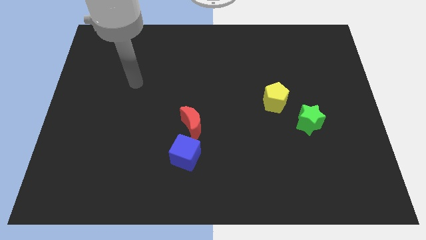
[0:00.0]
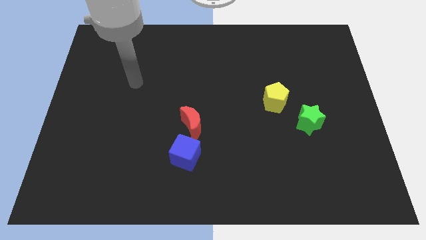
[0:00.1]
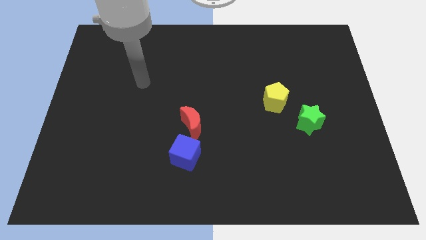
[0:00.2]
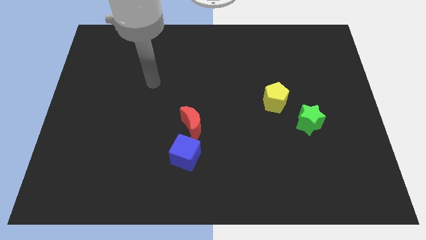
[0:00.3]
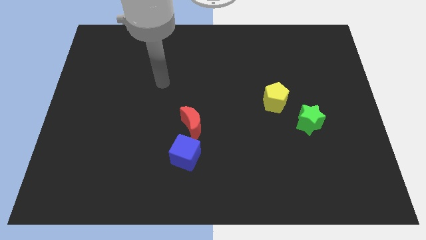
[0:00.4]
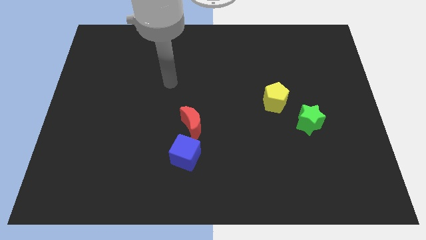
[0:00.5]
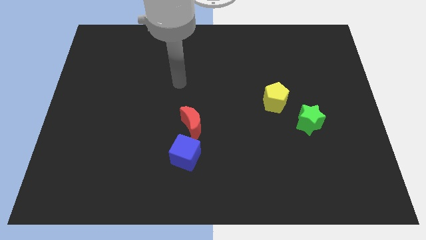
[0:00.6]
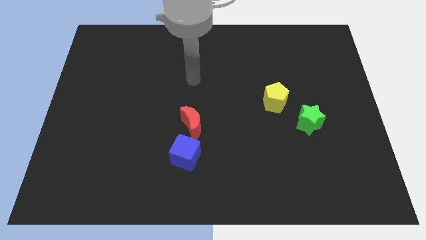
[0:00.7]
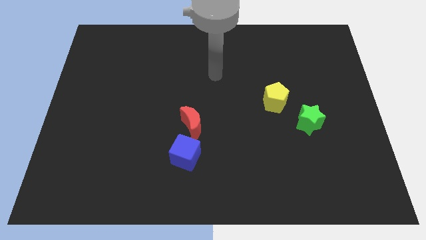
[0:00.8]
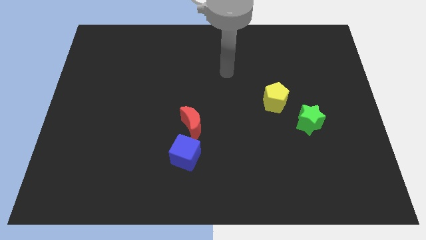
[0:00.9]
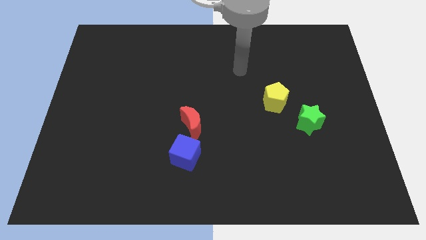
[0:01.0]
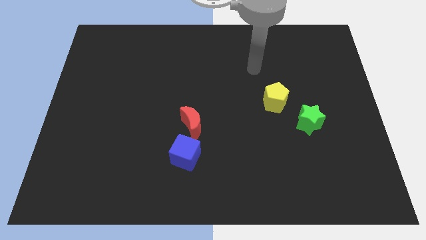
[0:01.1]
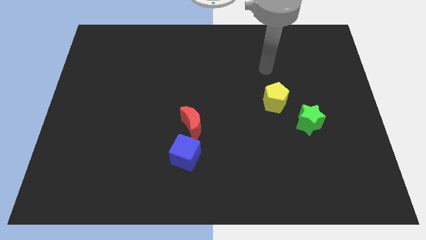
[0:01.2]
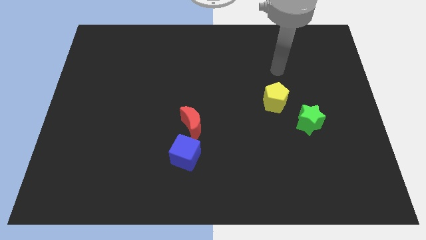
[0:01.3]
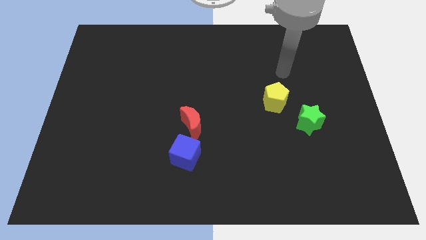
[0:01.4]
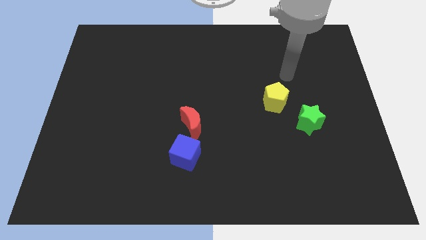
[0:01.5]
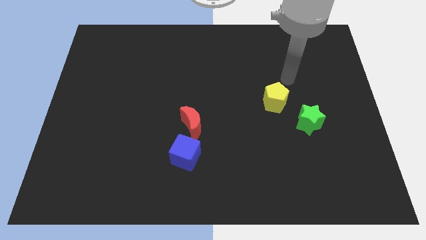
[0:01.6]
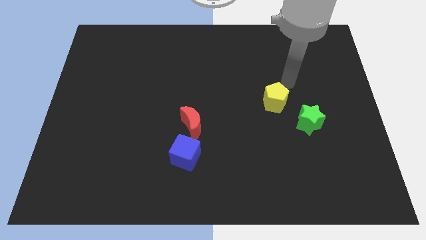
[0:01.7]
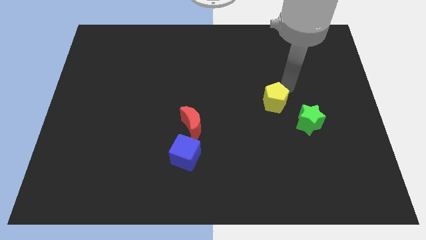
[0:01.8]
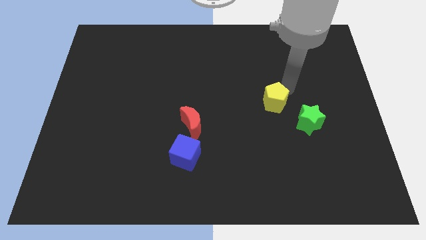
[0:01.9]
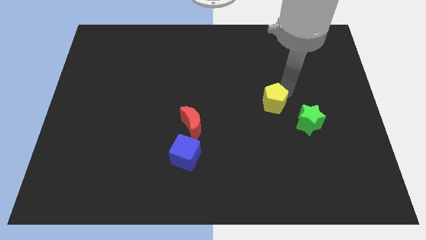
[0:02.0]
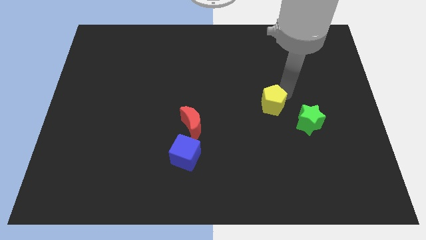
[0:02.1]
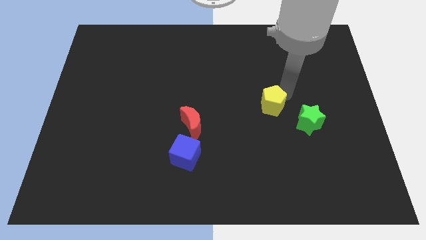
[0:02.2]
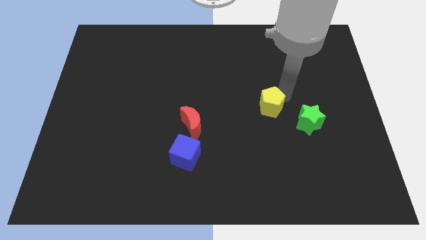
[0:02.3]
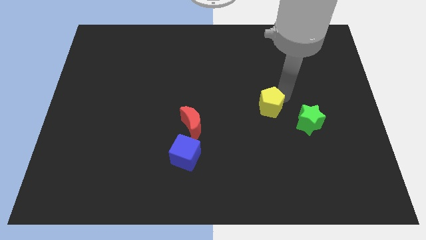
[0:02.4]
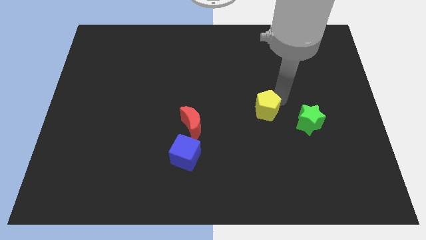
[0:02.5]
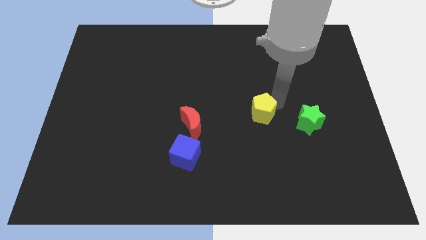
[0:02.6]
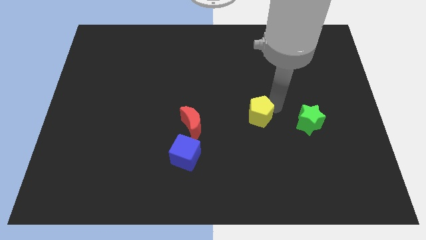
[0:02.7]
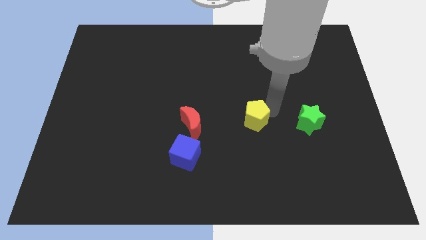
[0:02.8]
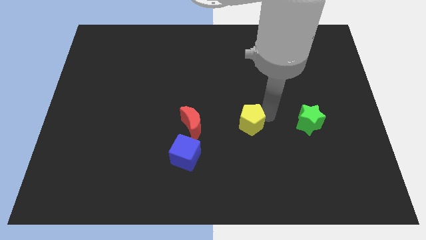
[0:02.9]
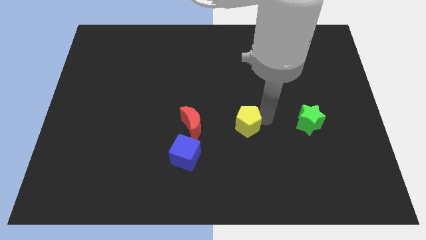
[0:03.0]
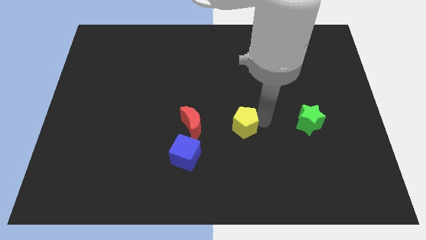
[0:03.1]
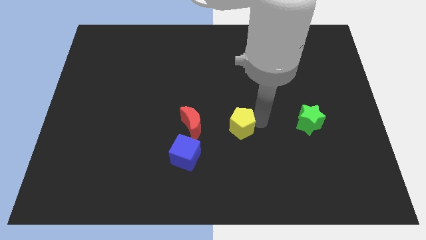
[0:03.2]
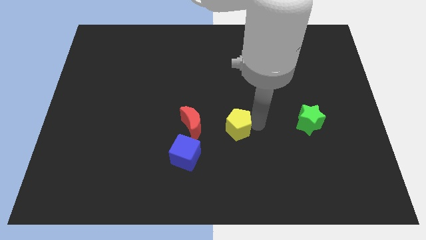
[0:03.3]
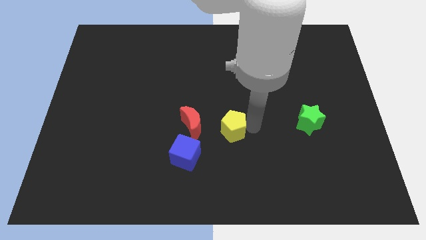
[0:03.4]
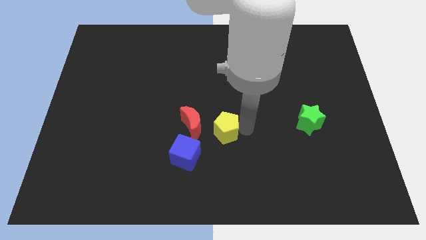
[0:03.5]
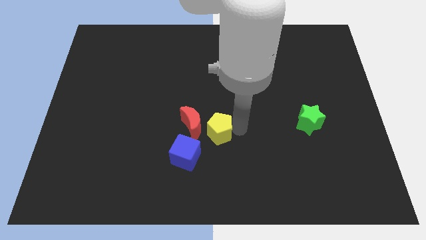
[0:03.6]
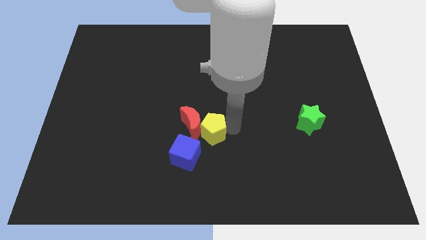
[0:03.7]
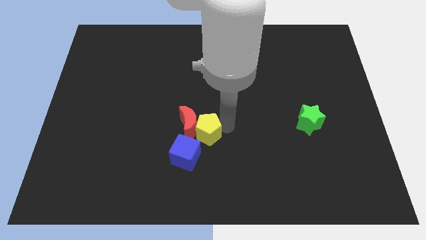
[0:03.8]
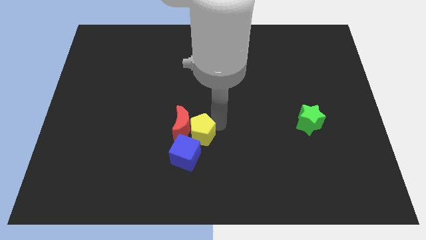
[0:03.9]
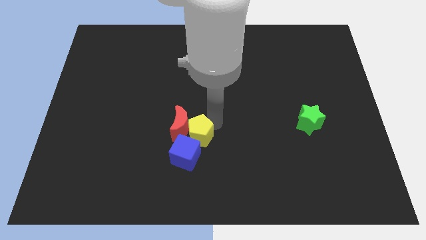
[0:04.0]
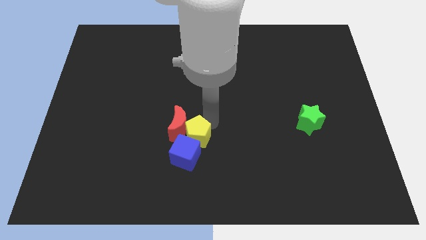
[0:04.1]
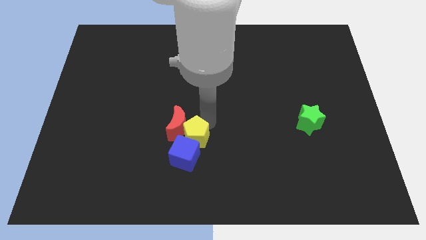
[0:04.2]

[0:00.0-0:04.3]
put the yellow block to the cube

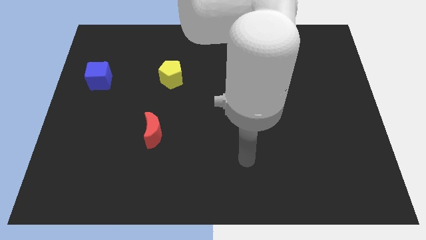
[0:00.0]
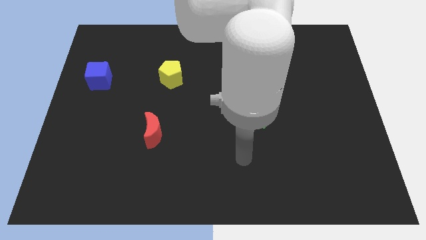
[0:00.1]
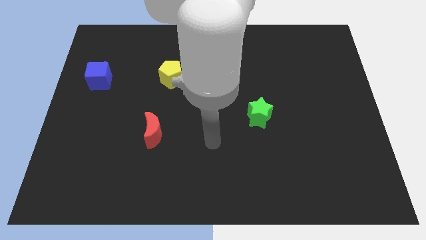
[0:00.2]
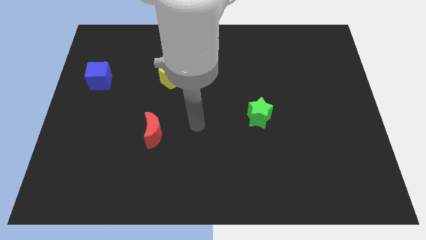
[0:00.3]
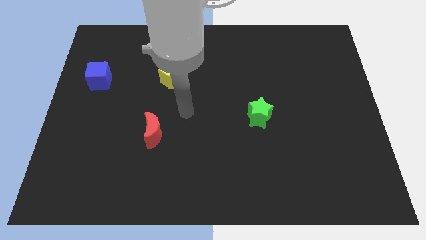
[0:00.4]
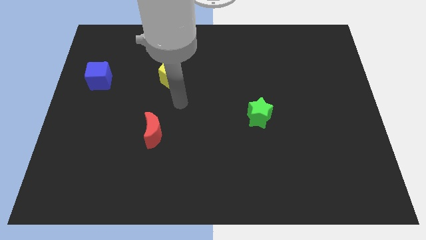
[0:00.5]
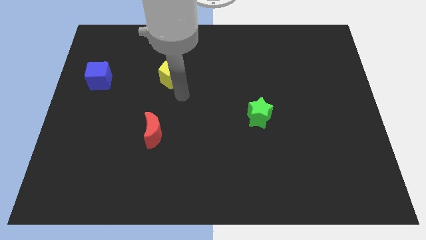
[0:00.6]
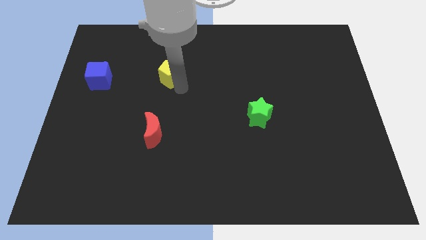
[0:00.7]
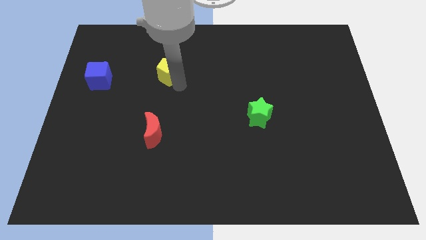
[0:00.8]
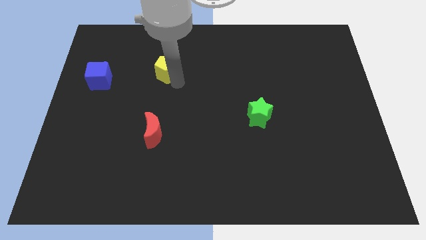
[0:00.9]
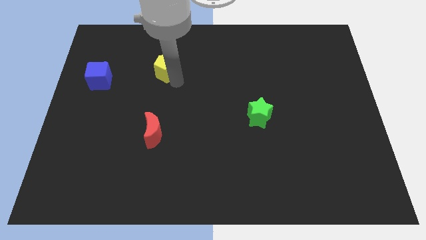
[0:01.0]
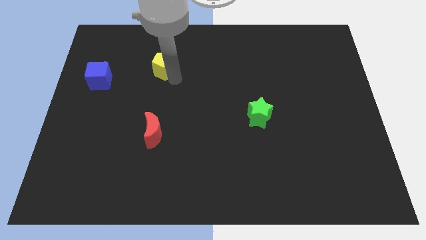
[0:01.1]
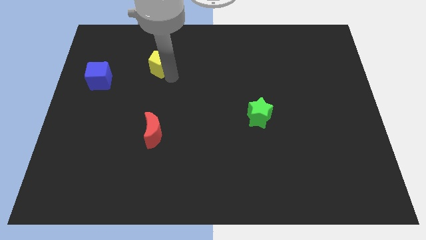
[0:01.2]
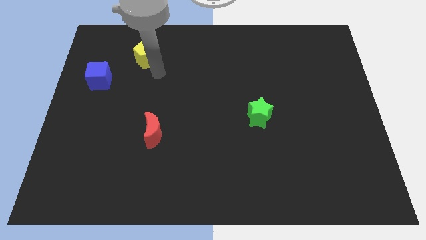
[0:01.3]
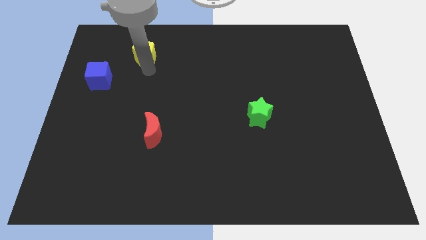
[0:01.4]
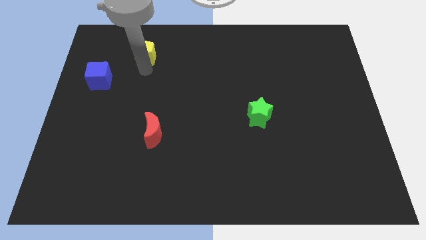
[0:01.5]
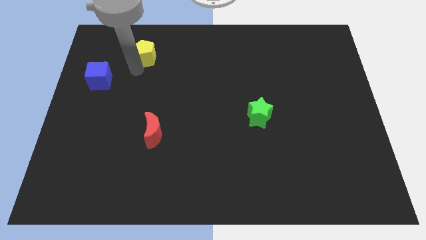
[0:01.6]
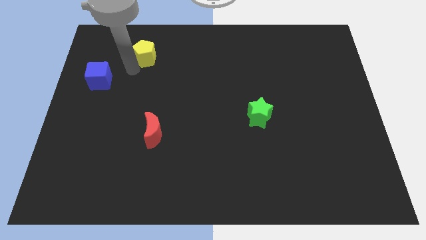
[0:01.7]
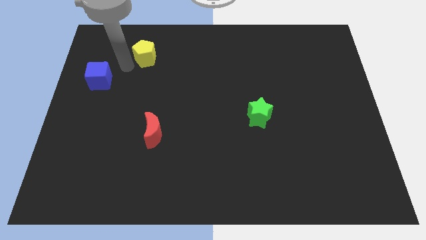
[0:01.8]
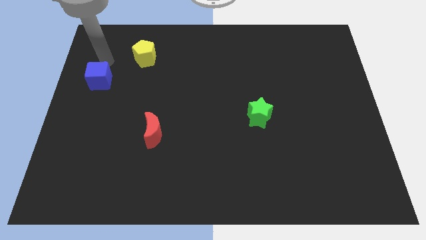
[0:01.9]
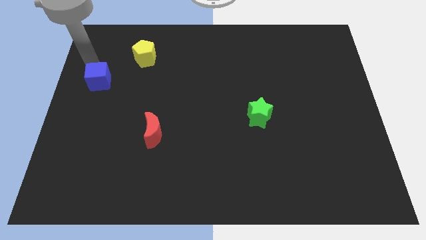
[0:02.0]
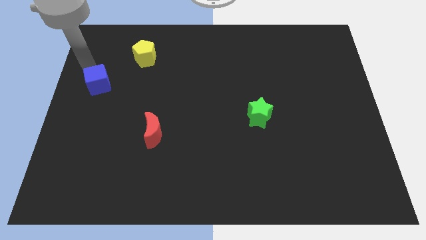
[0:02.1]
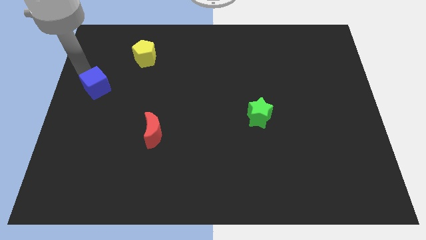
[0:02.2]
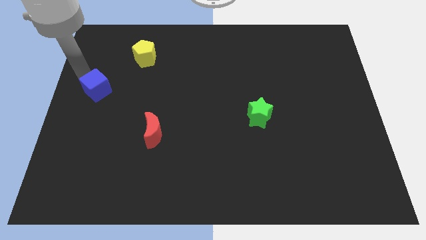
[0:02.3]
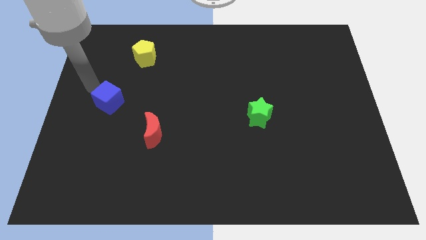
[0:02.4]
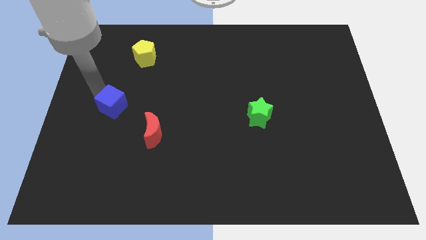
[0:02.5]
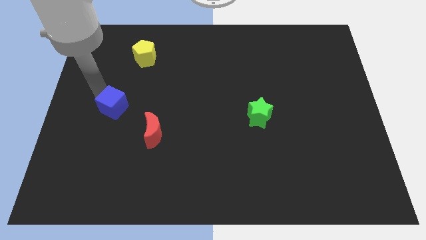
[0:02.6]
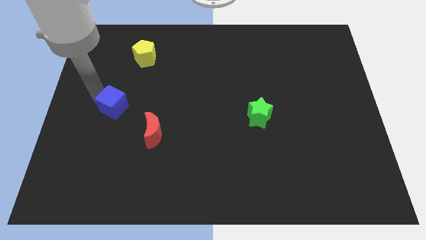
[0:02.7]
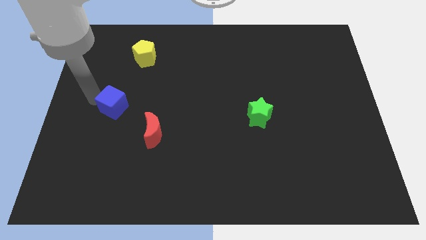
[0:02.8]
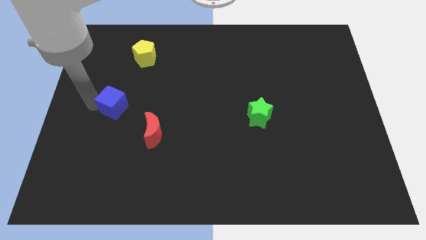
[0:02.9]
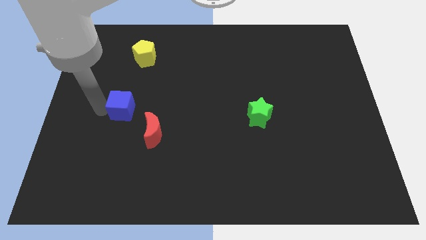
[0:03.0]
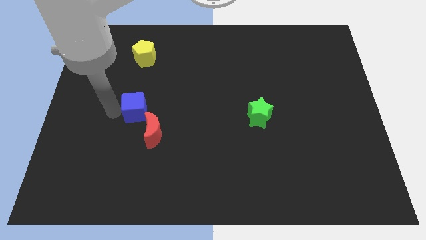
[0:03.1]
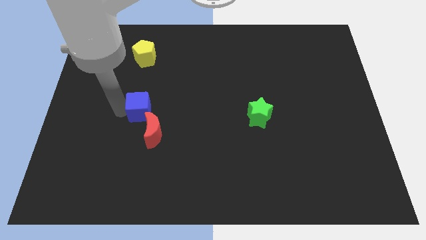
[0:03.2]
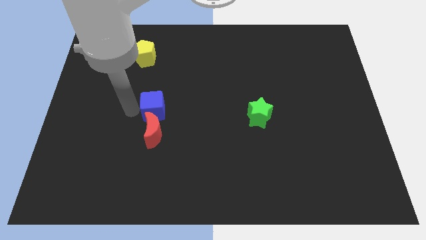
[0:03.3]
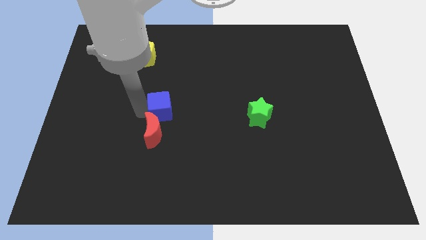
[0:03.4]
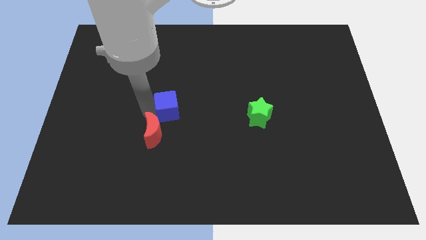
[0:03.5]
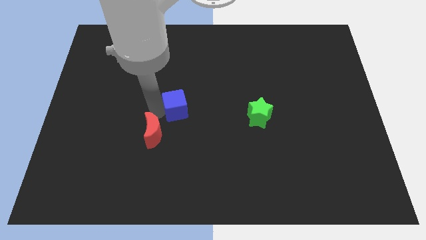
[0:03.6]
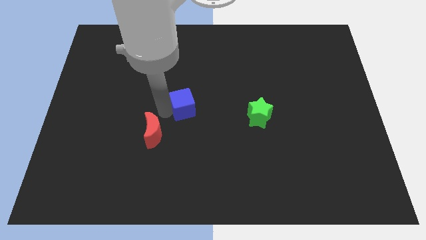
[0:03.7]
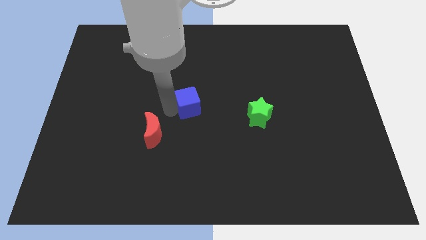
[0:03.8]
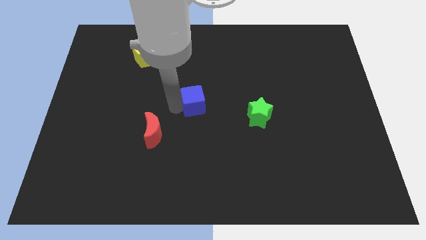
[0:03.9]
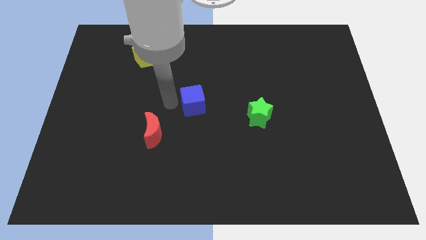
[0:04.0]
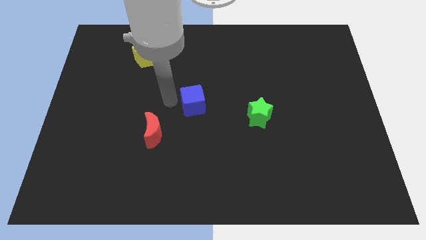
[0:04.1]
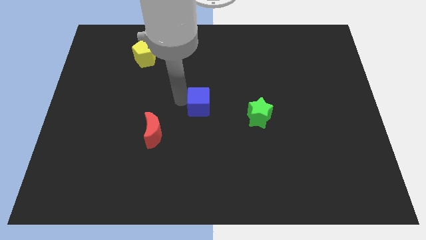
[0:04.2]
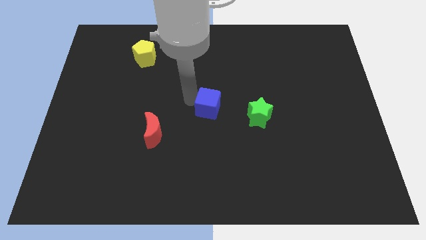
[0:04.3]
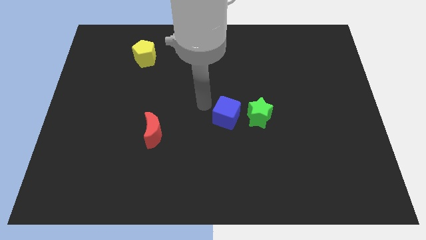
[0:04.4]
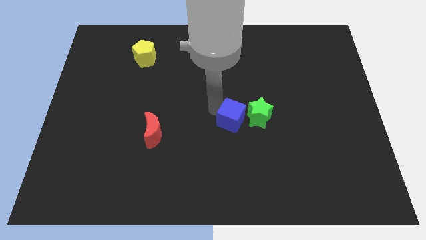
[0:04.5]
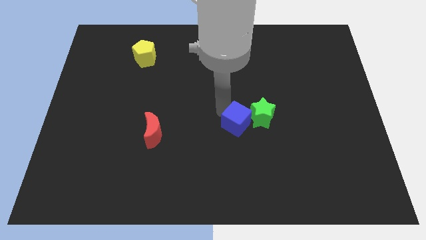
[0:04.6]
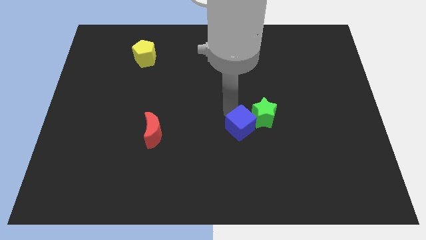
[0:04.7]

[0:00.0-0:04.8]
push the blue cube next to the star
